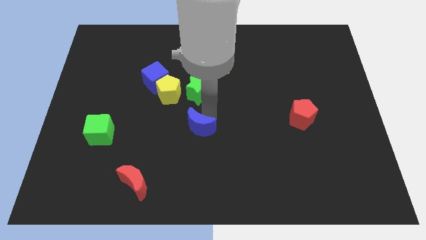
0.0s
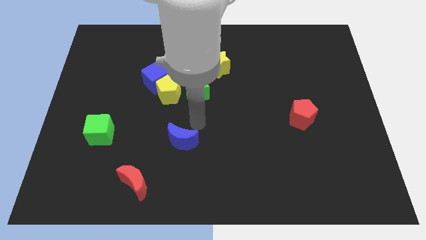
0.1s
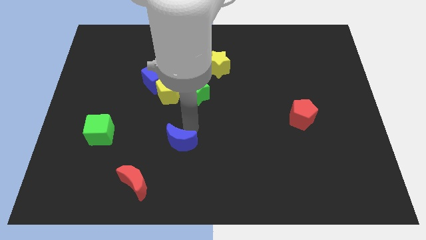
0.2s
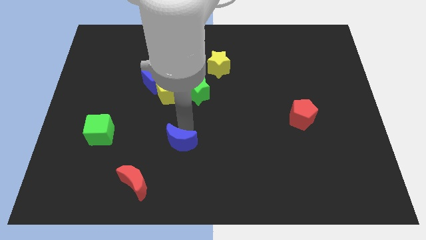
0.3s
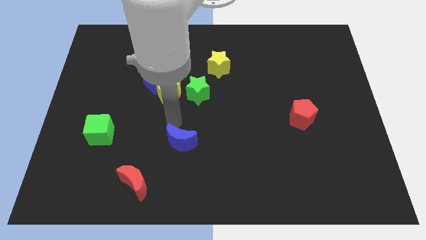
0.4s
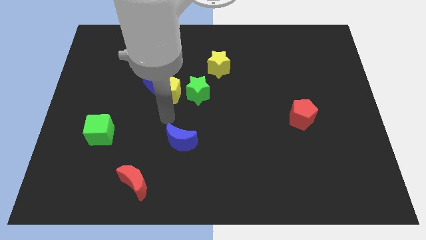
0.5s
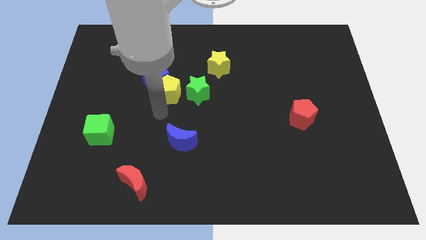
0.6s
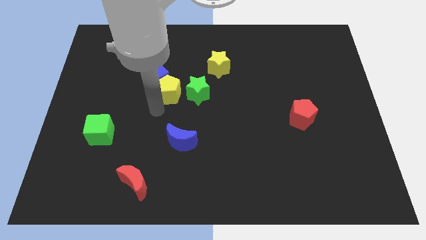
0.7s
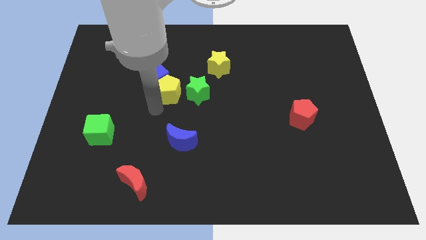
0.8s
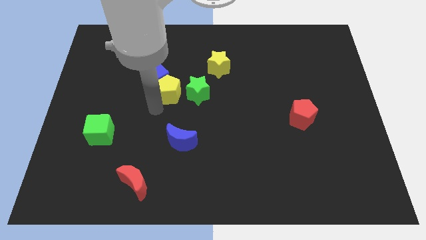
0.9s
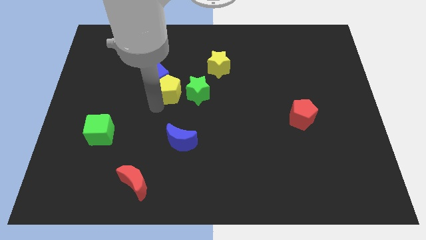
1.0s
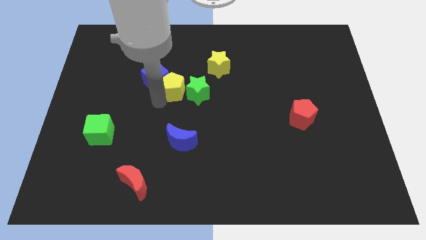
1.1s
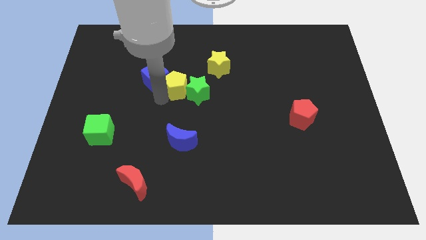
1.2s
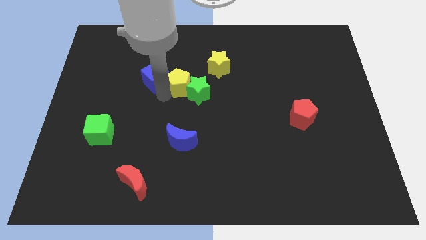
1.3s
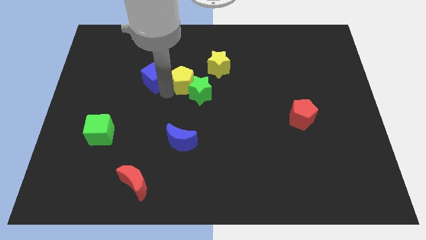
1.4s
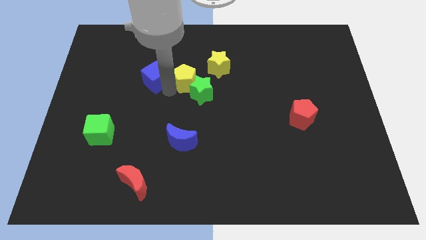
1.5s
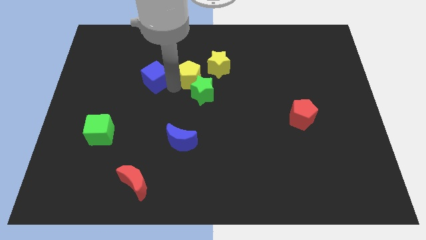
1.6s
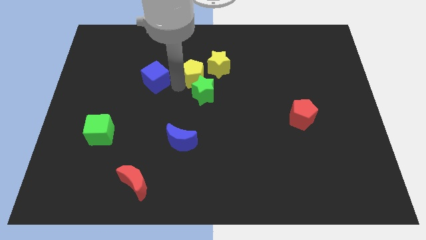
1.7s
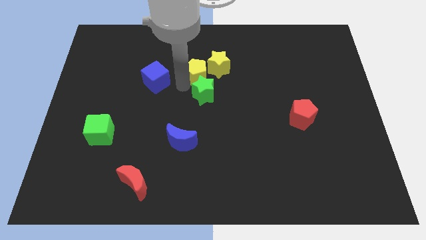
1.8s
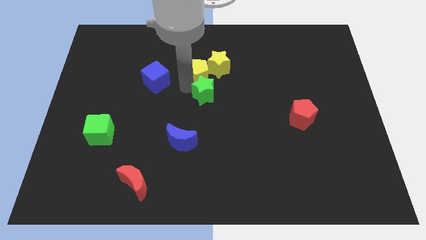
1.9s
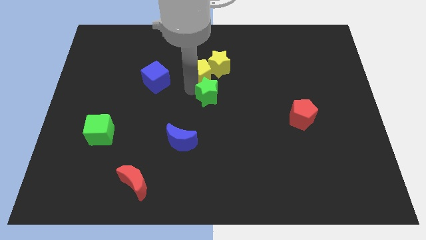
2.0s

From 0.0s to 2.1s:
move the yellow pentagon to the top of the green star

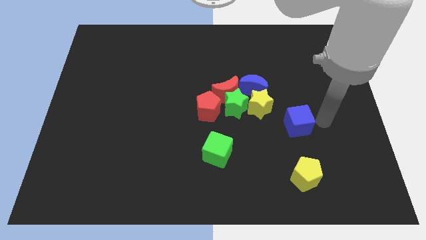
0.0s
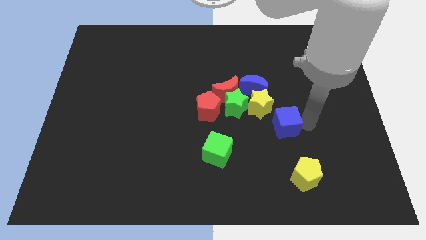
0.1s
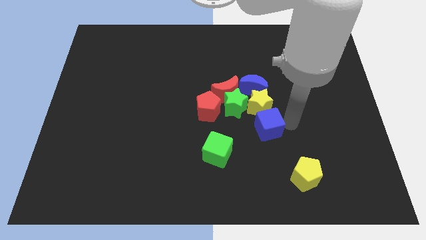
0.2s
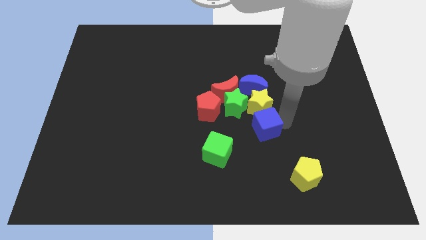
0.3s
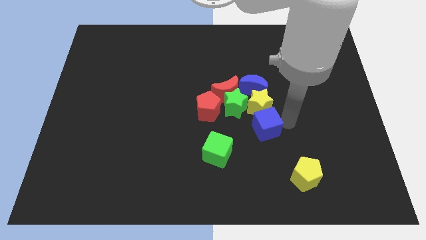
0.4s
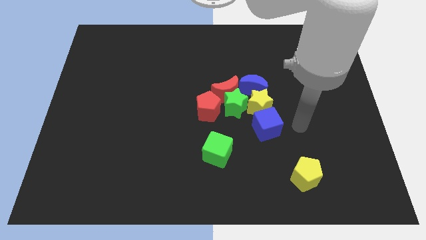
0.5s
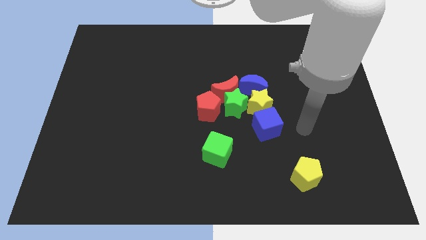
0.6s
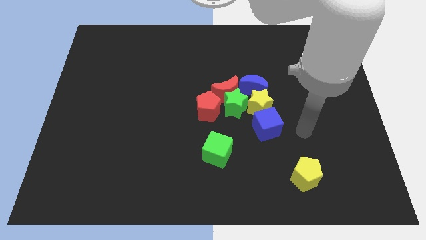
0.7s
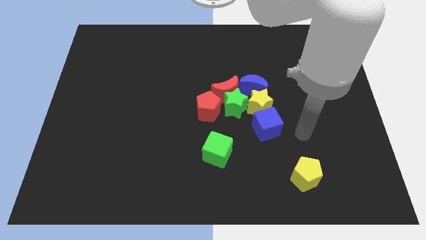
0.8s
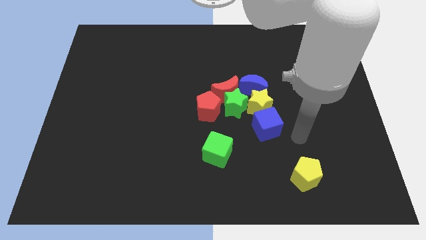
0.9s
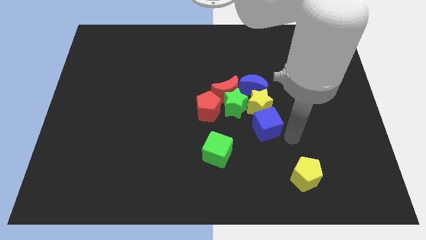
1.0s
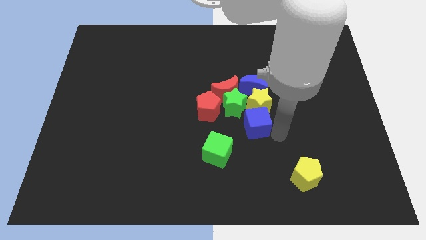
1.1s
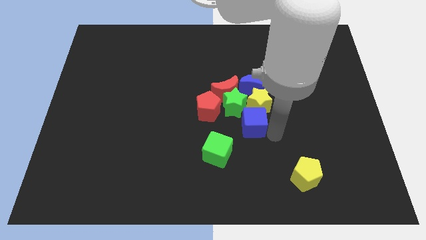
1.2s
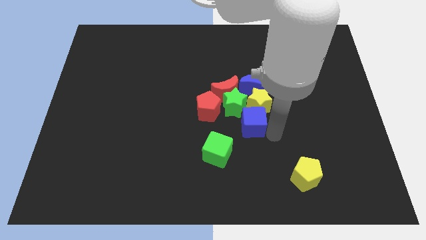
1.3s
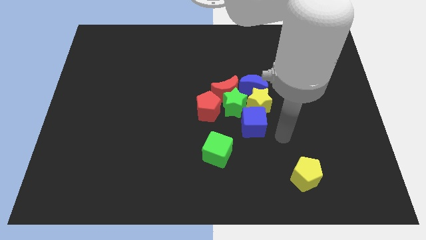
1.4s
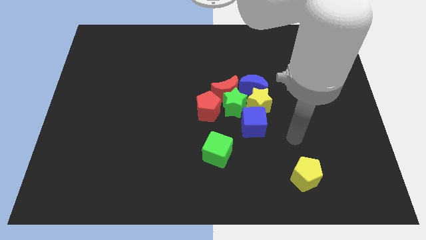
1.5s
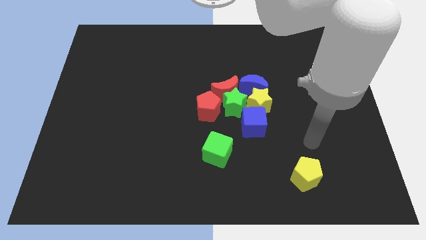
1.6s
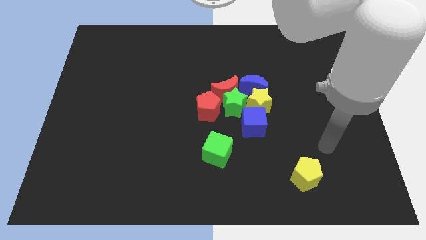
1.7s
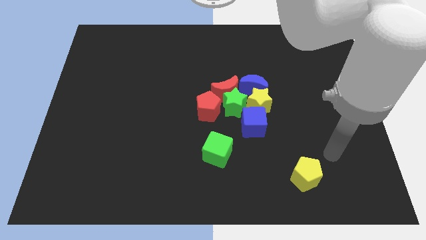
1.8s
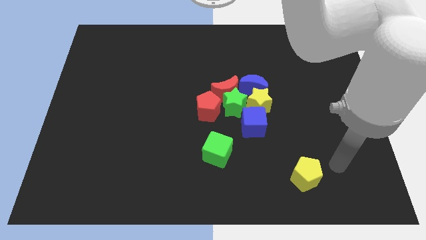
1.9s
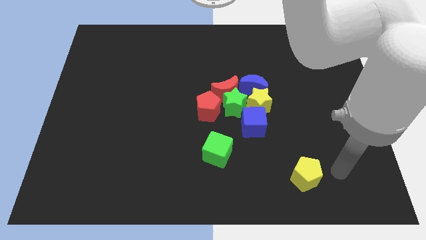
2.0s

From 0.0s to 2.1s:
place blue cube below yellow and green star

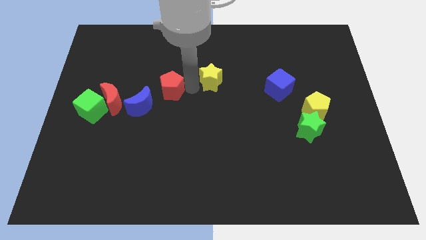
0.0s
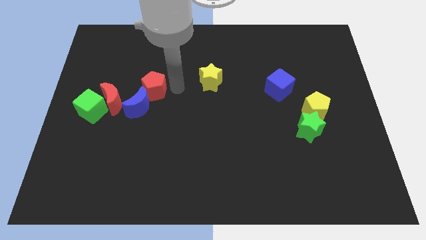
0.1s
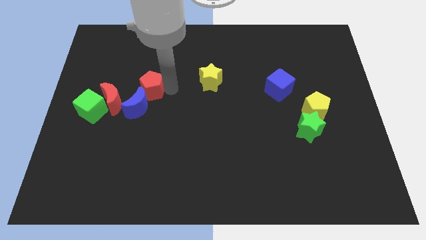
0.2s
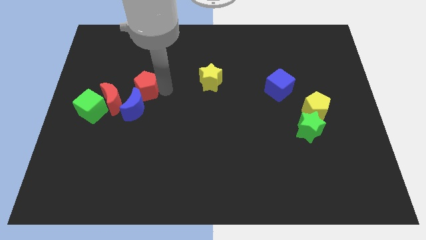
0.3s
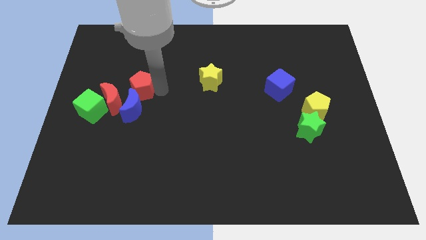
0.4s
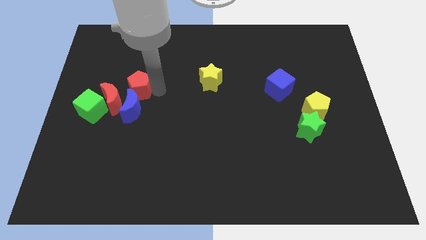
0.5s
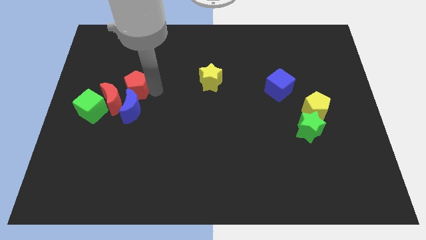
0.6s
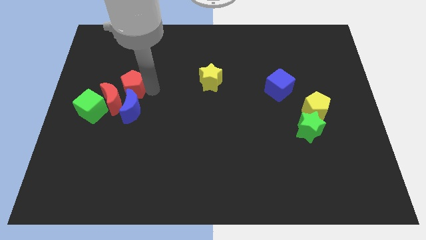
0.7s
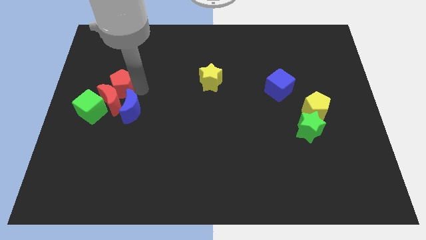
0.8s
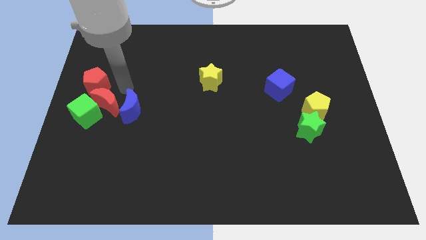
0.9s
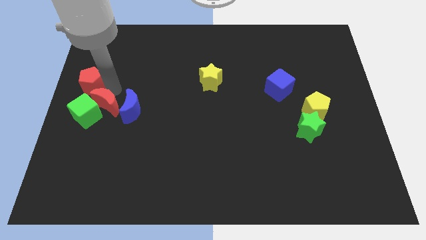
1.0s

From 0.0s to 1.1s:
move the red pentagon to the top of the green cube

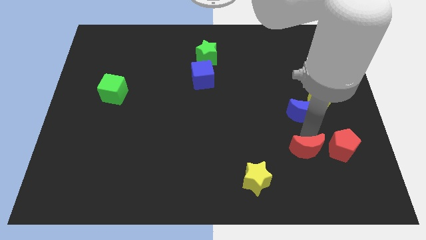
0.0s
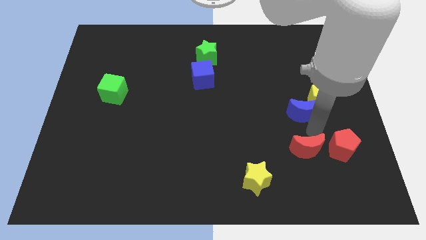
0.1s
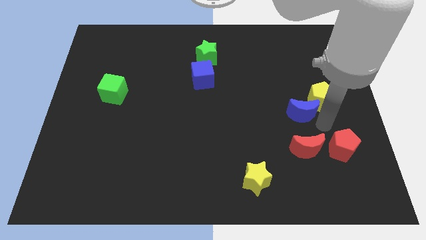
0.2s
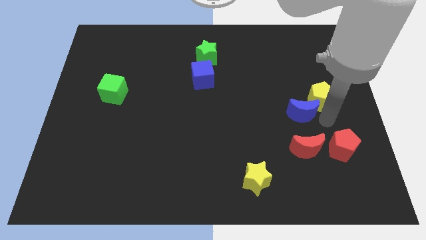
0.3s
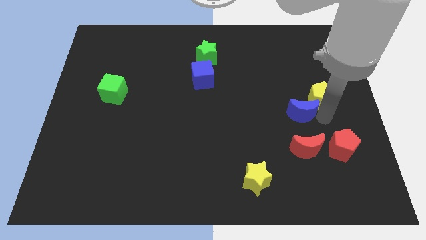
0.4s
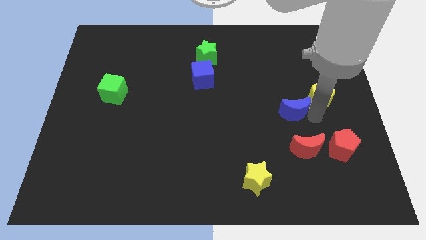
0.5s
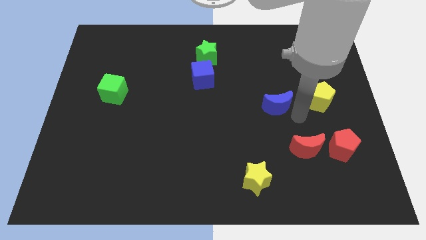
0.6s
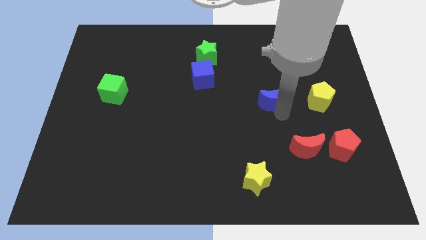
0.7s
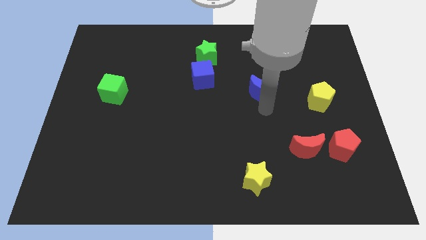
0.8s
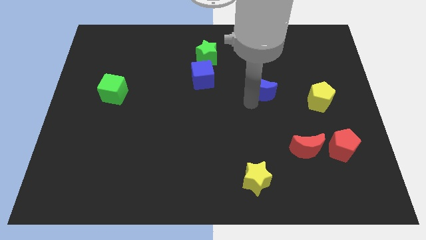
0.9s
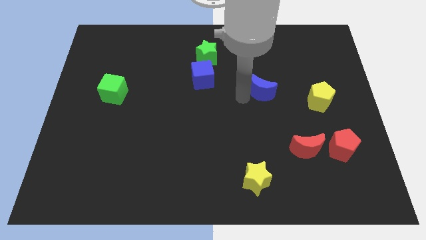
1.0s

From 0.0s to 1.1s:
place the blue moon in between the blue cube and yellow pentagon

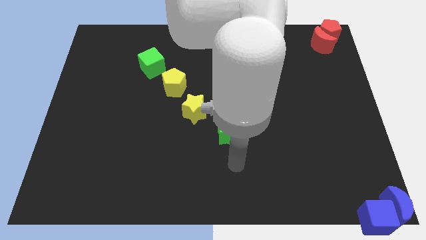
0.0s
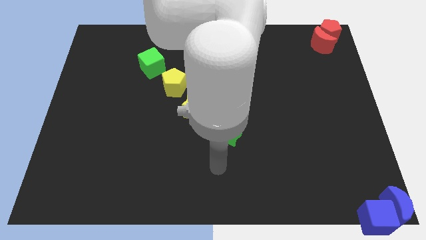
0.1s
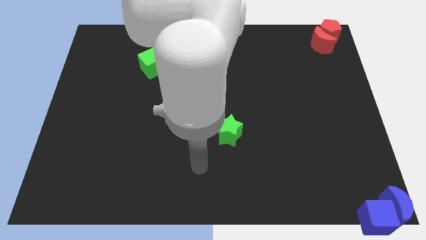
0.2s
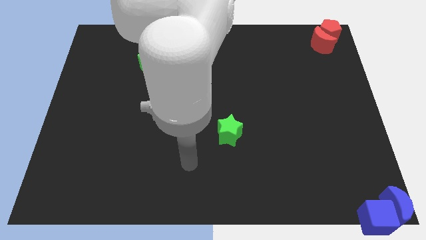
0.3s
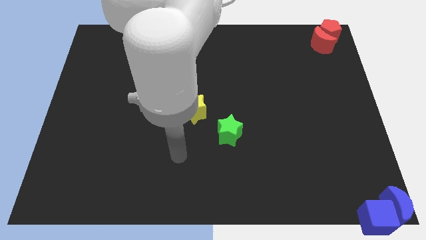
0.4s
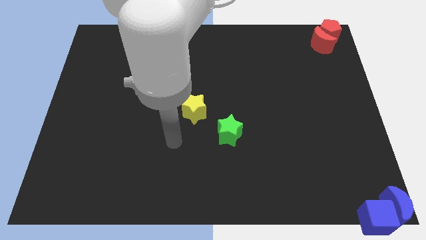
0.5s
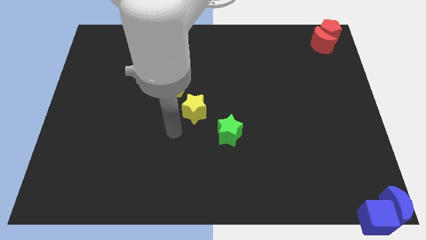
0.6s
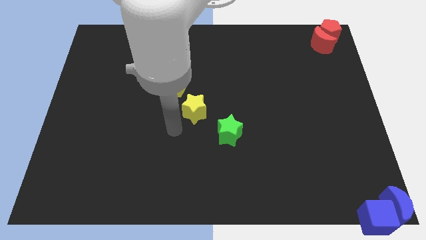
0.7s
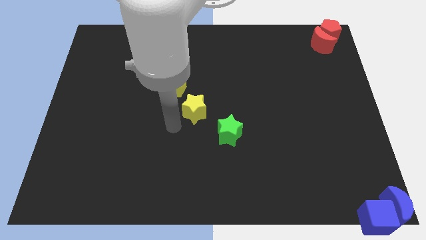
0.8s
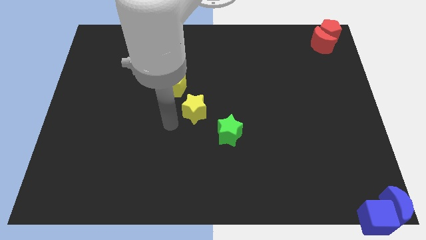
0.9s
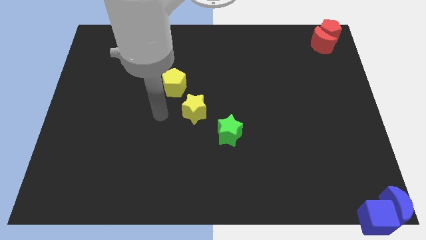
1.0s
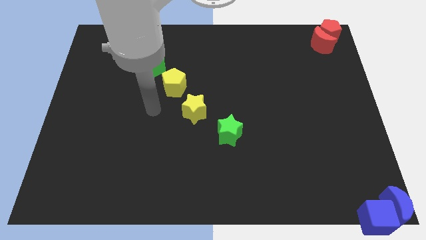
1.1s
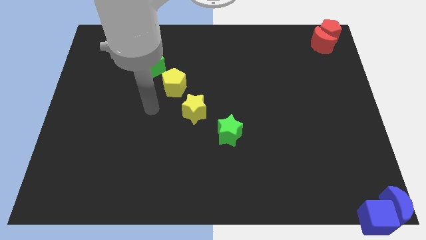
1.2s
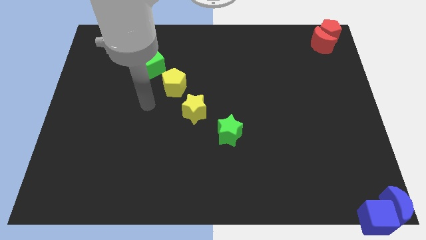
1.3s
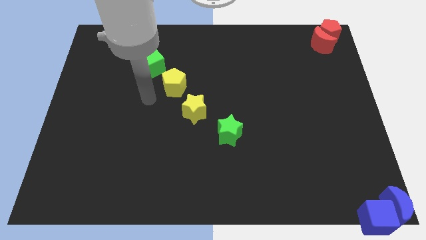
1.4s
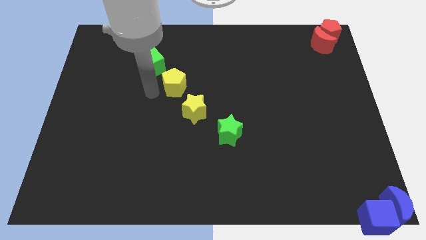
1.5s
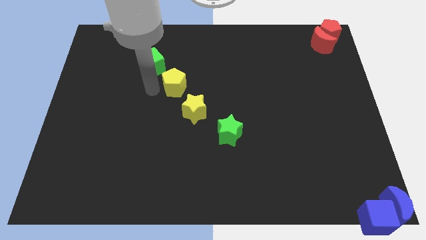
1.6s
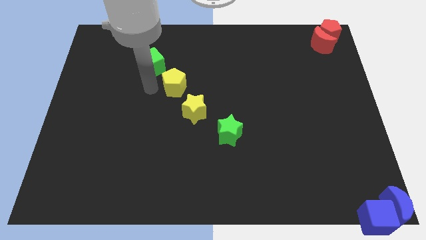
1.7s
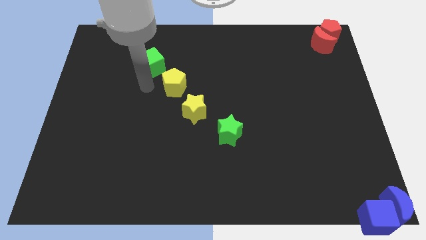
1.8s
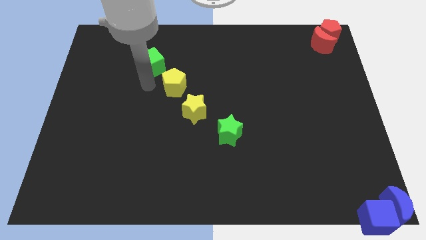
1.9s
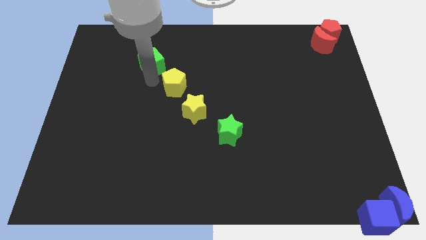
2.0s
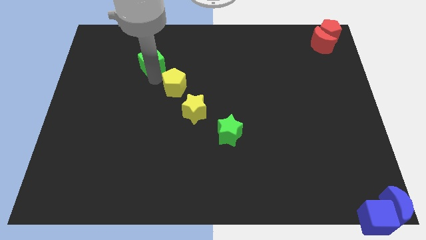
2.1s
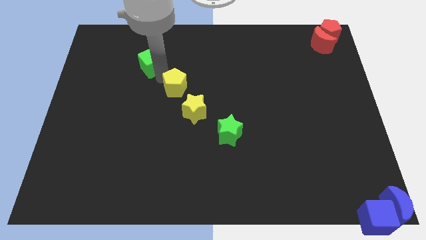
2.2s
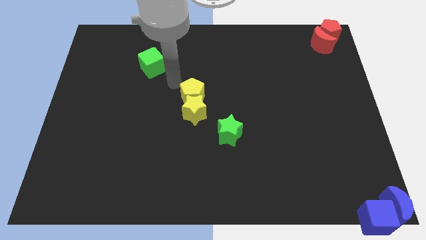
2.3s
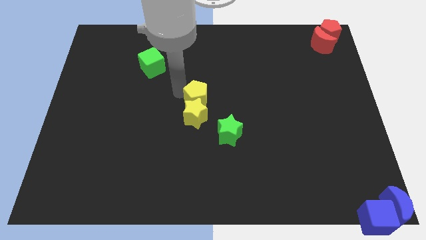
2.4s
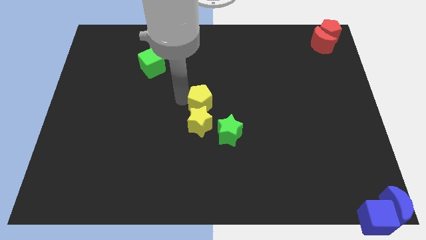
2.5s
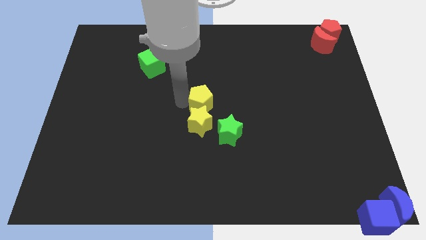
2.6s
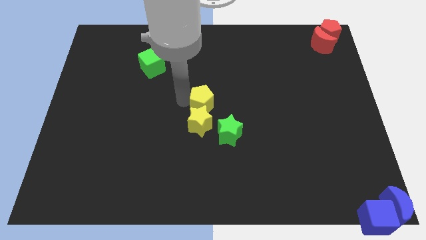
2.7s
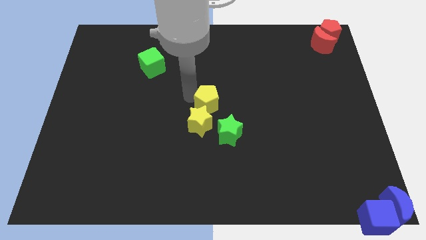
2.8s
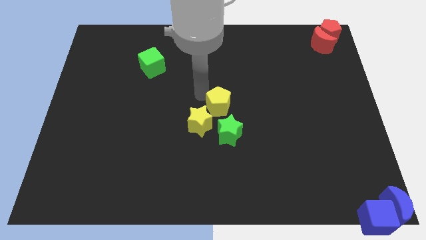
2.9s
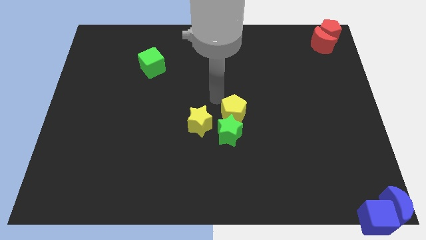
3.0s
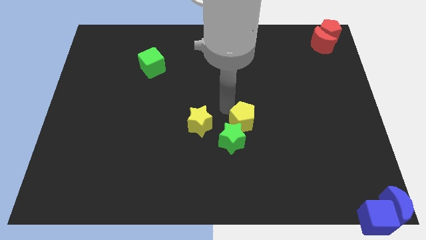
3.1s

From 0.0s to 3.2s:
place the yellow pentagon above the green star
